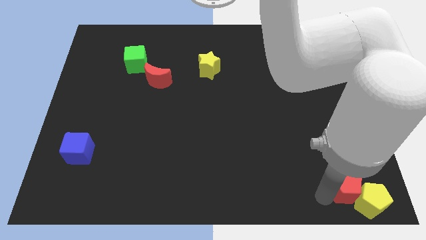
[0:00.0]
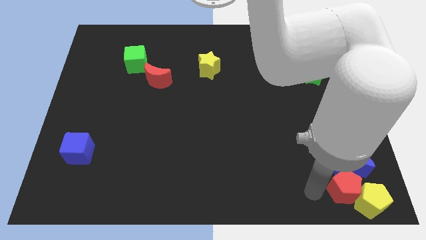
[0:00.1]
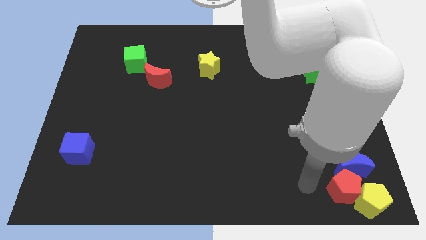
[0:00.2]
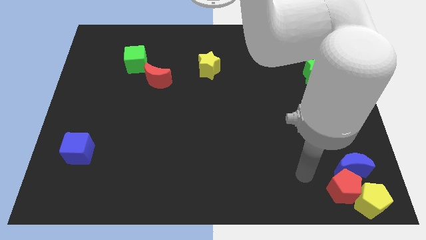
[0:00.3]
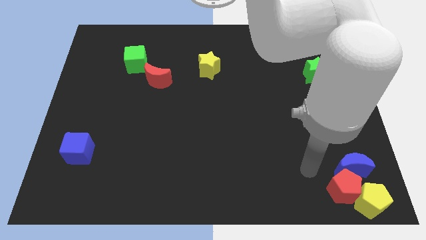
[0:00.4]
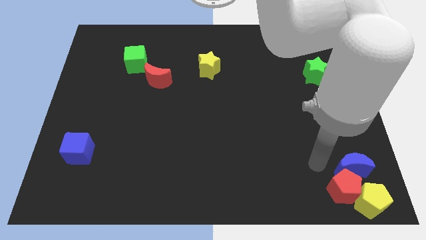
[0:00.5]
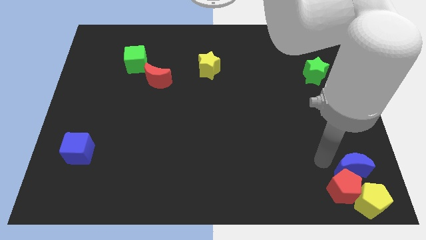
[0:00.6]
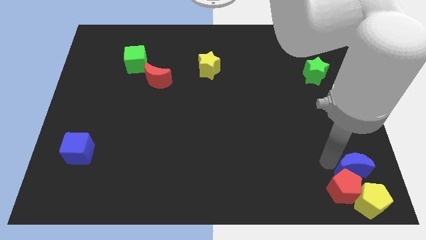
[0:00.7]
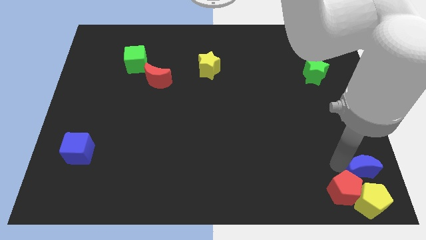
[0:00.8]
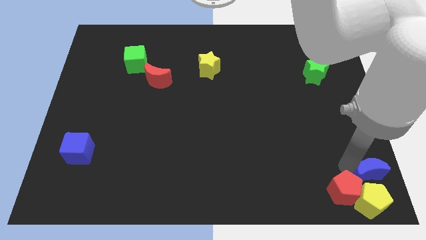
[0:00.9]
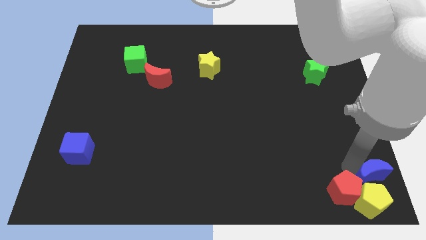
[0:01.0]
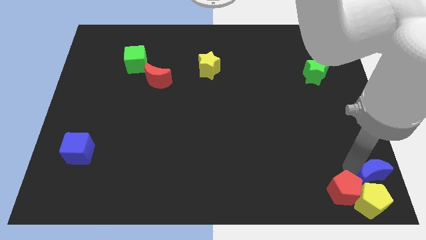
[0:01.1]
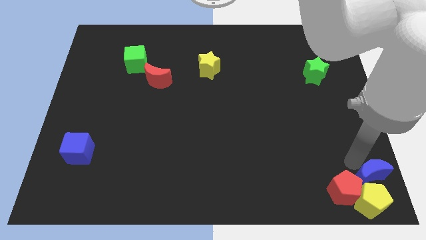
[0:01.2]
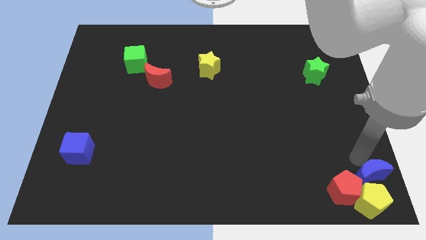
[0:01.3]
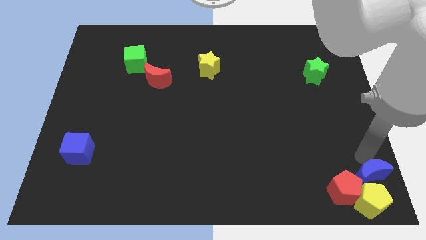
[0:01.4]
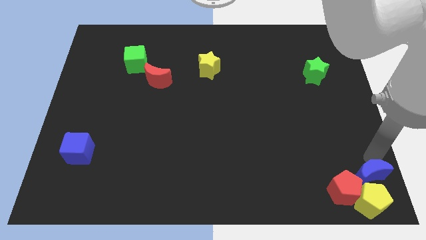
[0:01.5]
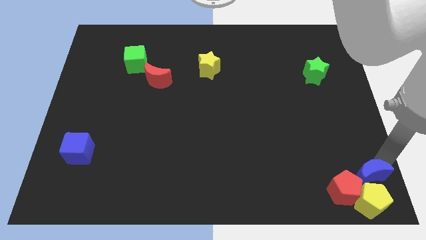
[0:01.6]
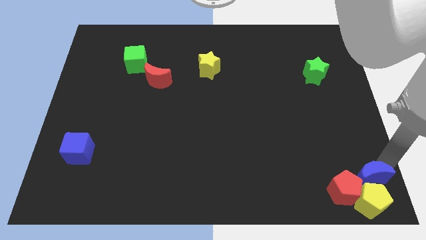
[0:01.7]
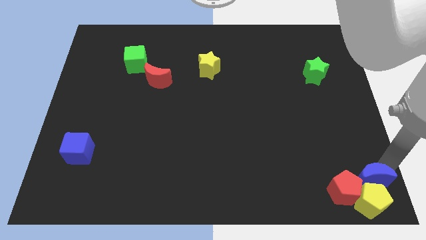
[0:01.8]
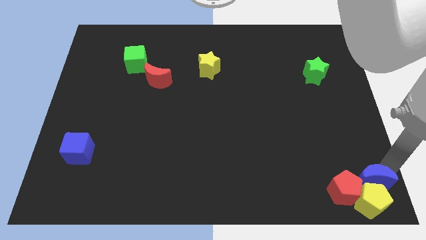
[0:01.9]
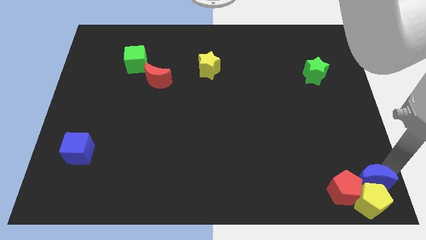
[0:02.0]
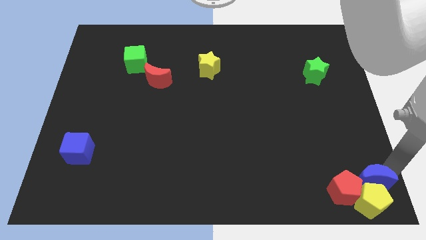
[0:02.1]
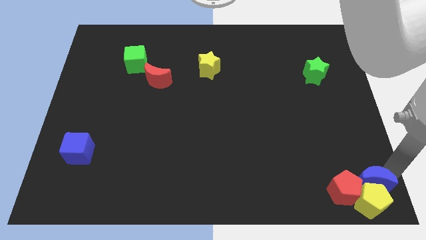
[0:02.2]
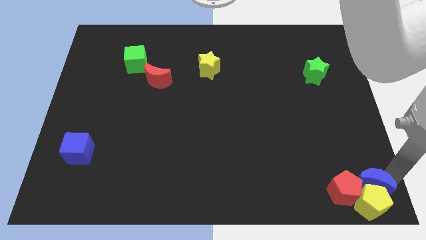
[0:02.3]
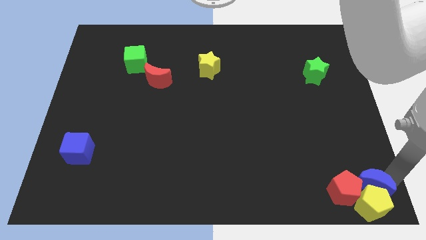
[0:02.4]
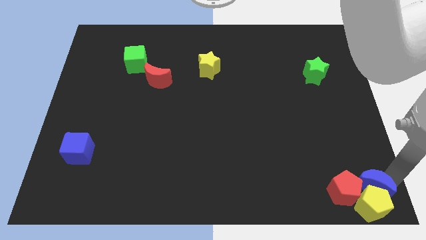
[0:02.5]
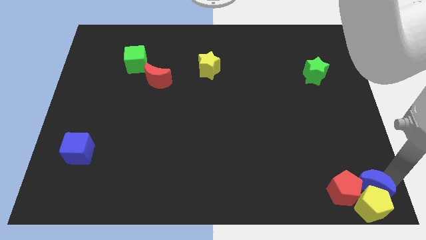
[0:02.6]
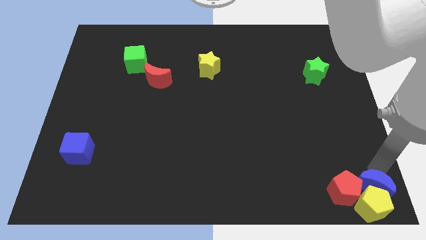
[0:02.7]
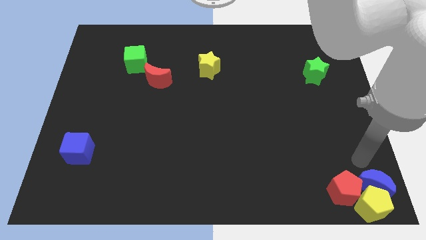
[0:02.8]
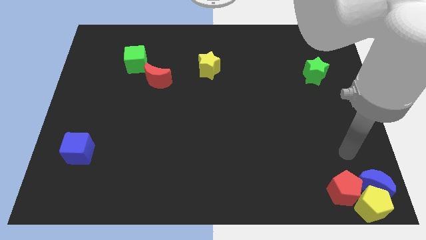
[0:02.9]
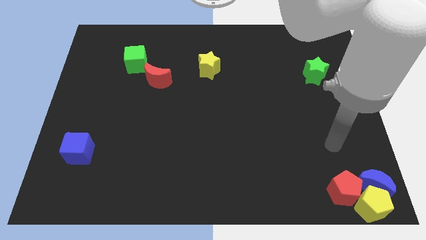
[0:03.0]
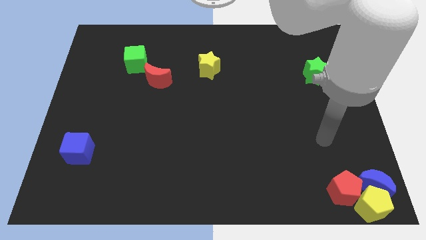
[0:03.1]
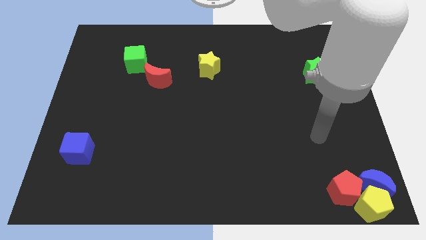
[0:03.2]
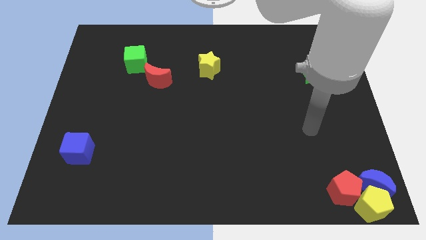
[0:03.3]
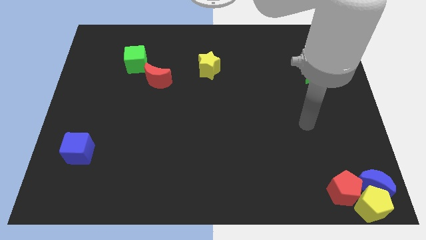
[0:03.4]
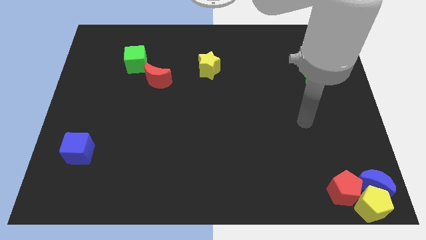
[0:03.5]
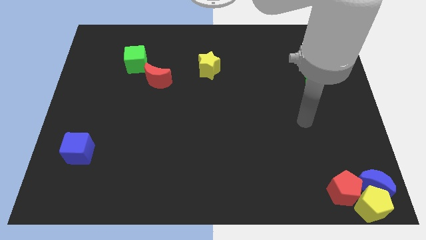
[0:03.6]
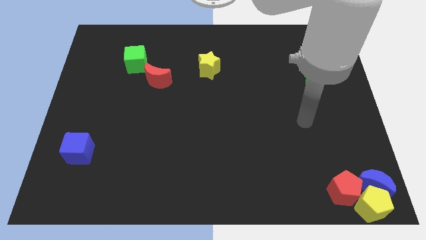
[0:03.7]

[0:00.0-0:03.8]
move the blue crescent into the yellow pentagon

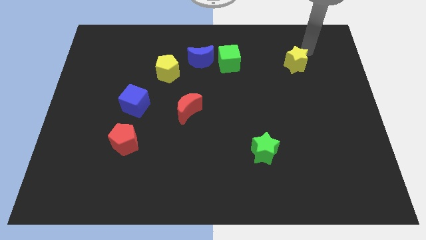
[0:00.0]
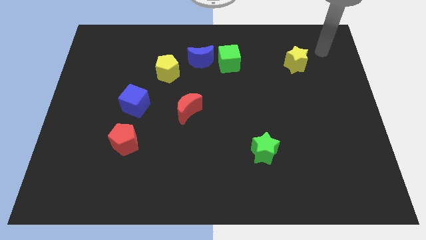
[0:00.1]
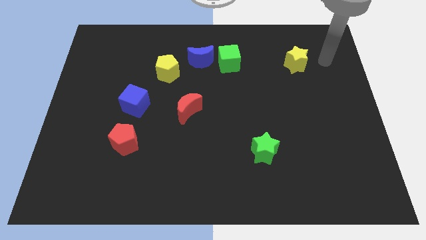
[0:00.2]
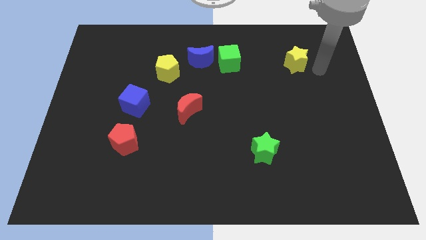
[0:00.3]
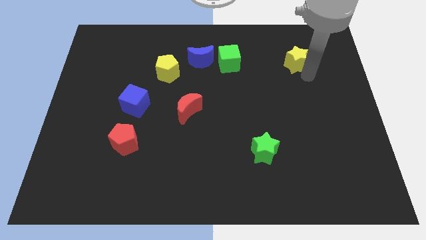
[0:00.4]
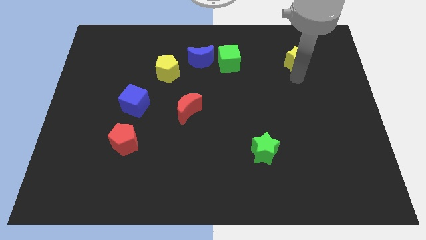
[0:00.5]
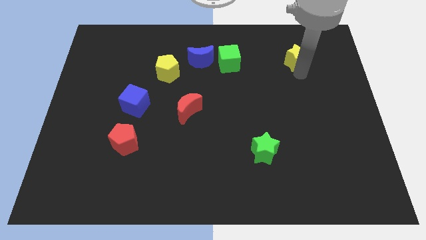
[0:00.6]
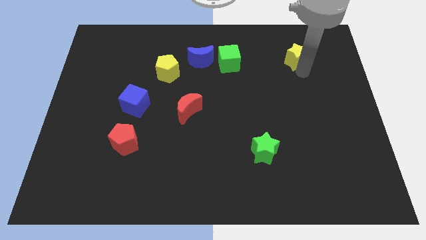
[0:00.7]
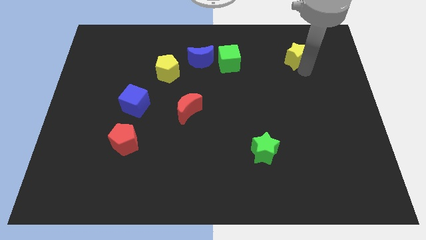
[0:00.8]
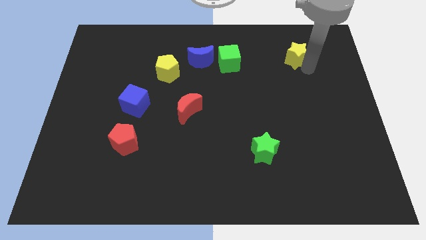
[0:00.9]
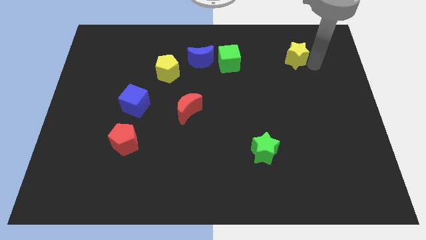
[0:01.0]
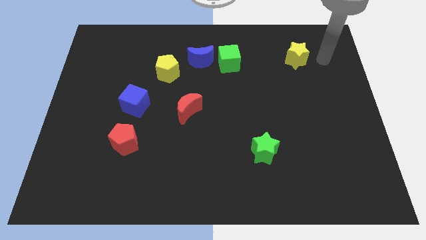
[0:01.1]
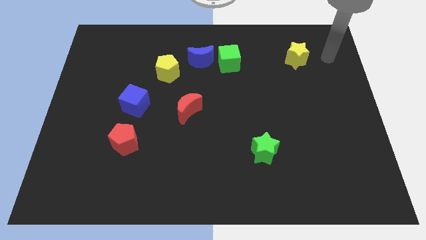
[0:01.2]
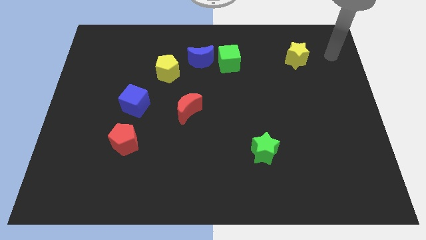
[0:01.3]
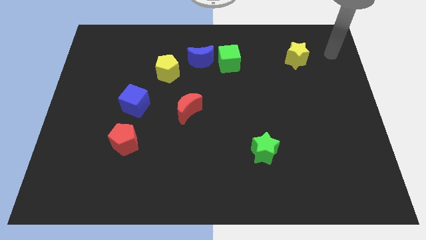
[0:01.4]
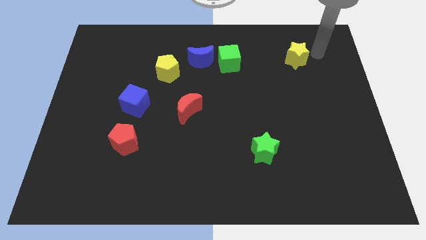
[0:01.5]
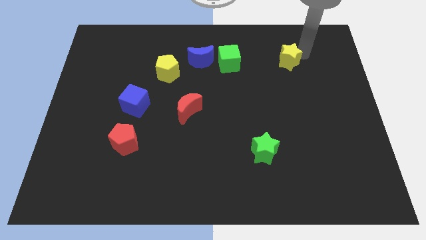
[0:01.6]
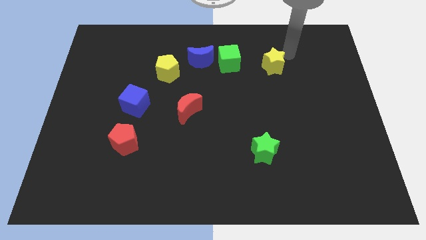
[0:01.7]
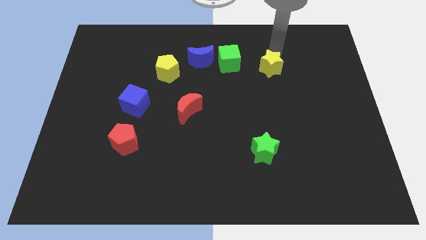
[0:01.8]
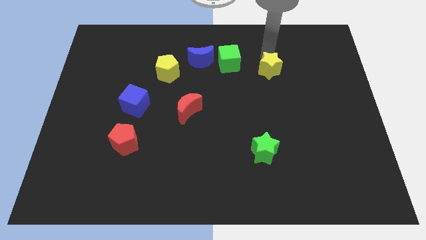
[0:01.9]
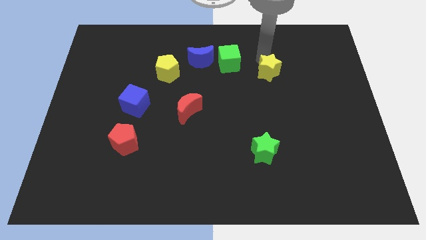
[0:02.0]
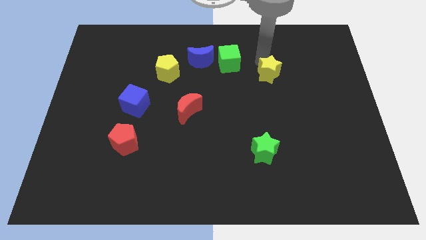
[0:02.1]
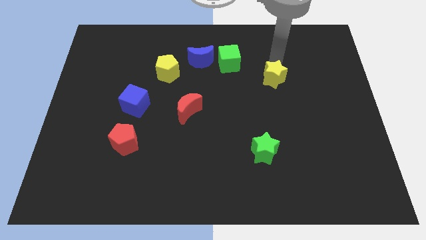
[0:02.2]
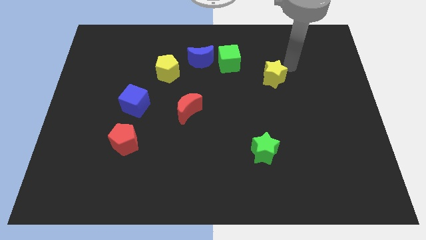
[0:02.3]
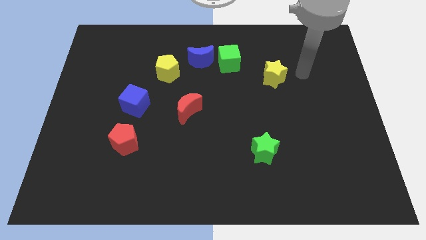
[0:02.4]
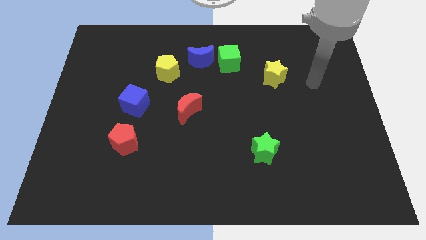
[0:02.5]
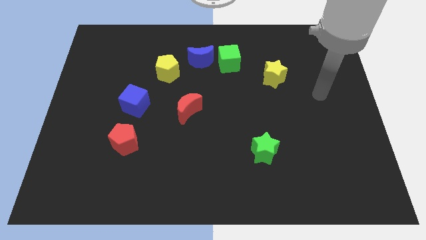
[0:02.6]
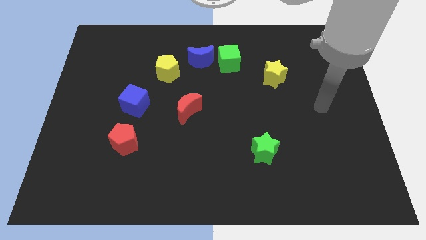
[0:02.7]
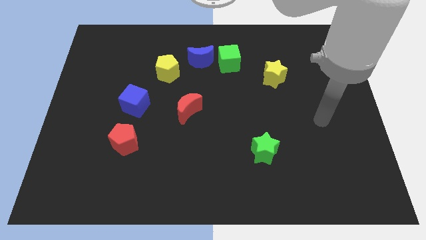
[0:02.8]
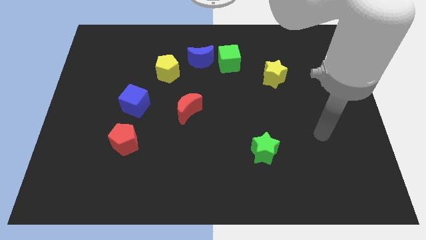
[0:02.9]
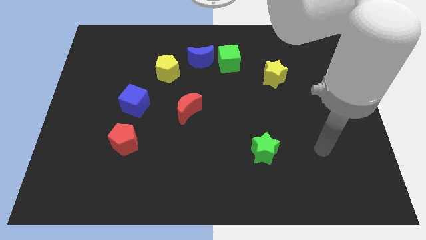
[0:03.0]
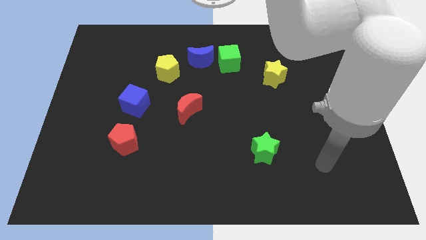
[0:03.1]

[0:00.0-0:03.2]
put the yellow star parallel to the yellow pentagon

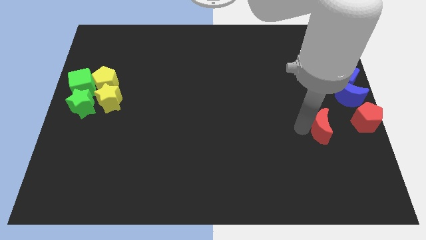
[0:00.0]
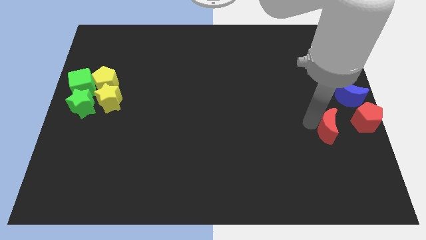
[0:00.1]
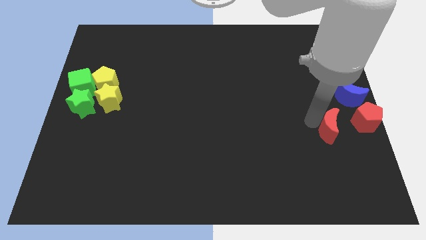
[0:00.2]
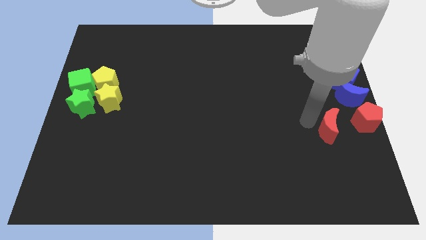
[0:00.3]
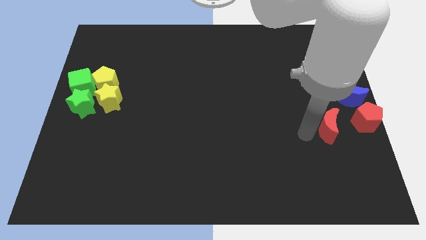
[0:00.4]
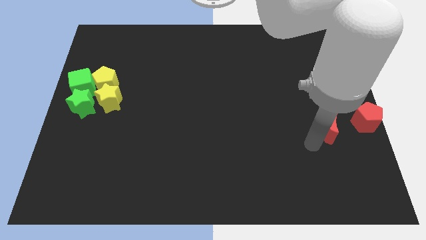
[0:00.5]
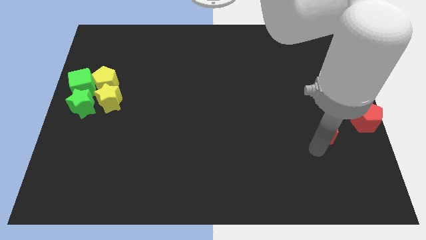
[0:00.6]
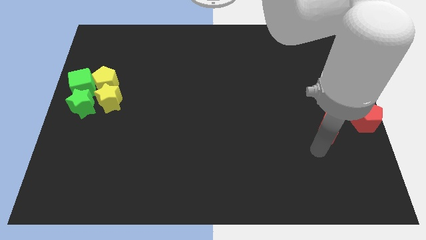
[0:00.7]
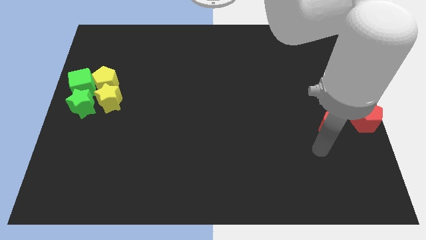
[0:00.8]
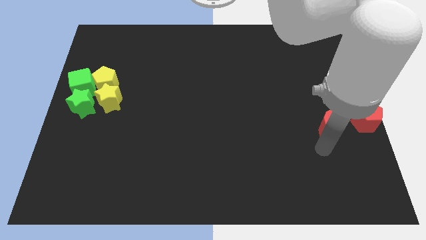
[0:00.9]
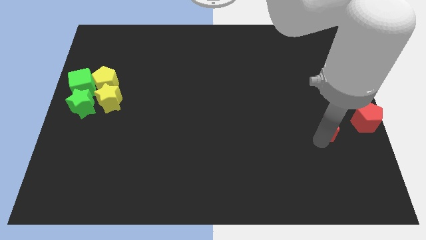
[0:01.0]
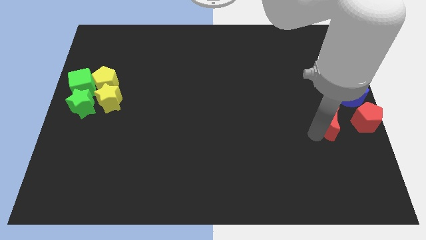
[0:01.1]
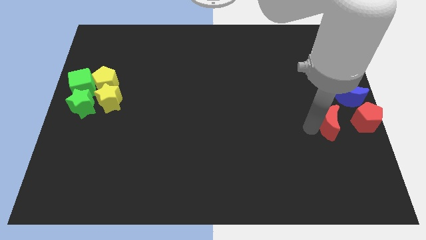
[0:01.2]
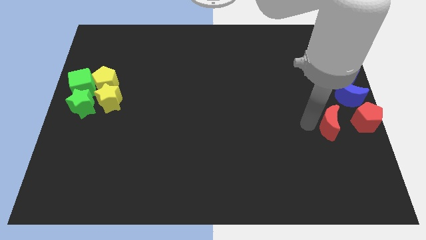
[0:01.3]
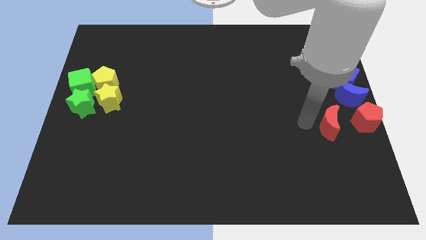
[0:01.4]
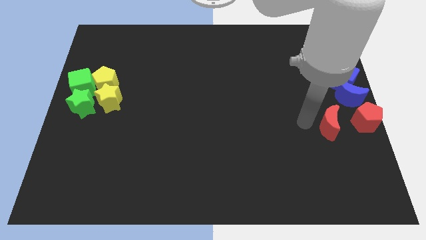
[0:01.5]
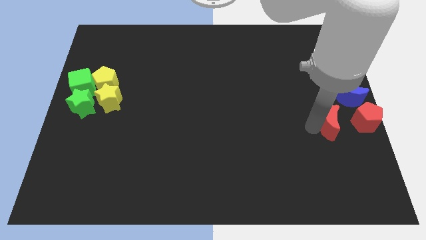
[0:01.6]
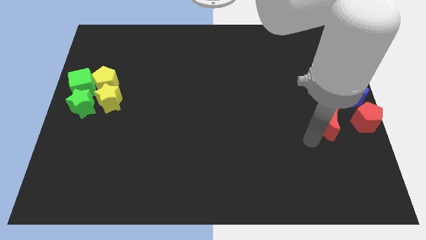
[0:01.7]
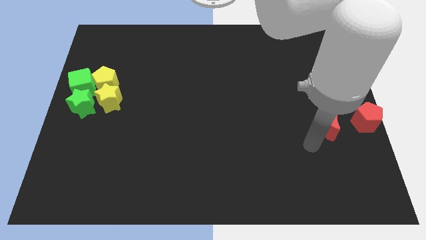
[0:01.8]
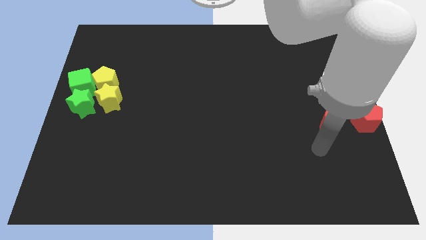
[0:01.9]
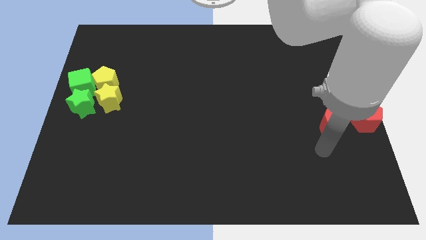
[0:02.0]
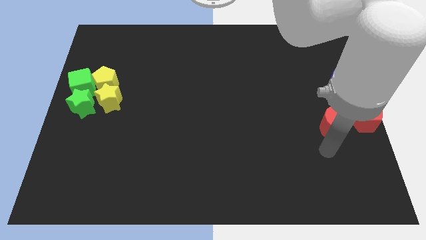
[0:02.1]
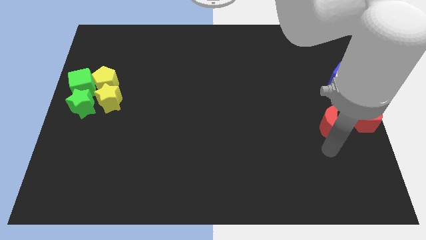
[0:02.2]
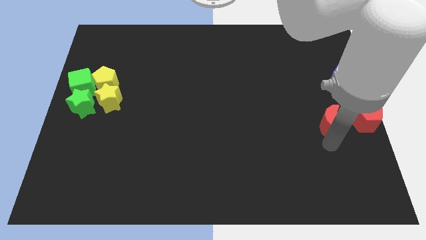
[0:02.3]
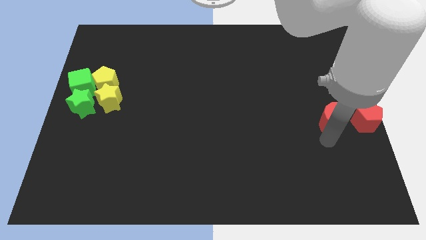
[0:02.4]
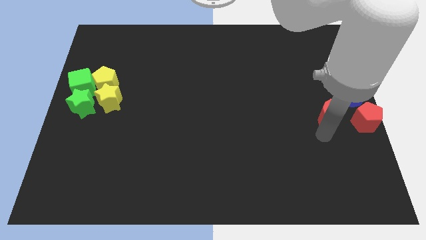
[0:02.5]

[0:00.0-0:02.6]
place the red crescent beside red pentagon
